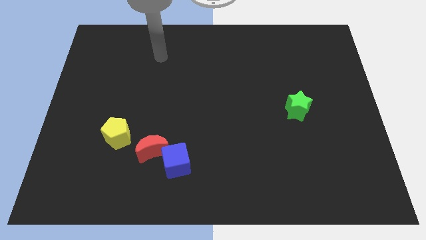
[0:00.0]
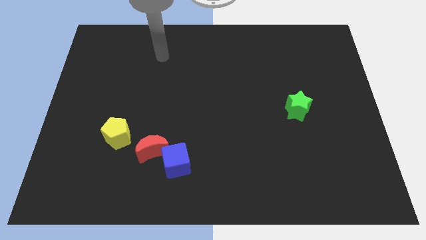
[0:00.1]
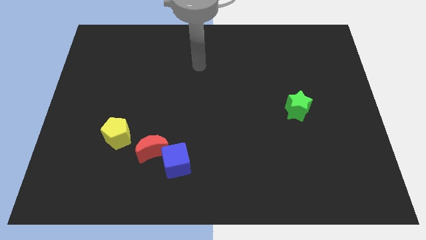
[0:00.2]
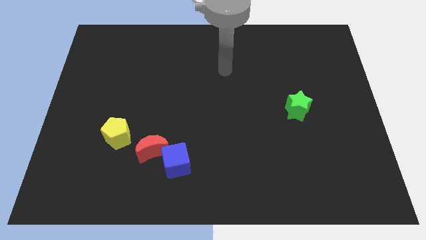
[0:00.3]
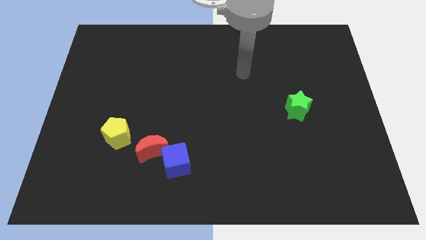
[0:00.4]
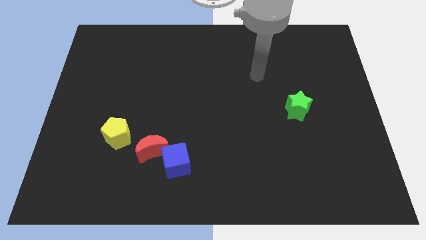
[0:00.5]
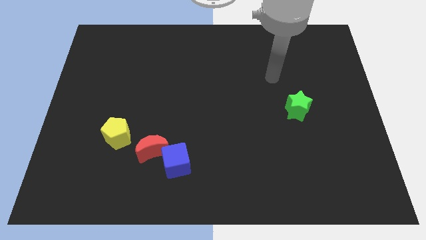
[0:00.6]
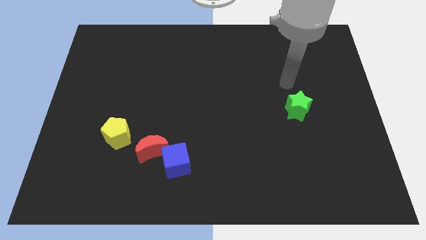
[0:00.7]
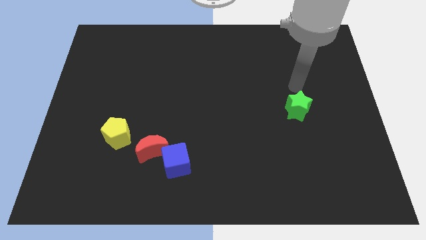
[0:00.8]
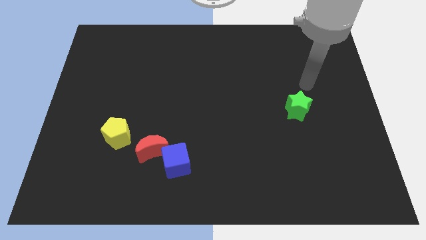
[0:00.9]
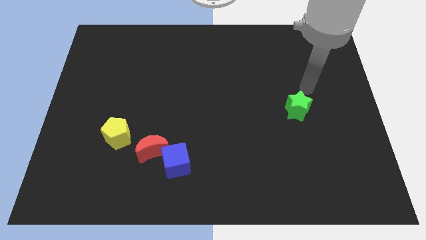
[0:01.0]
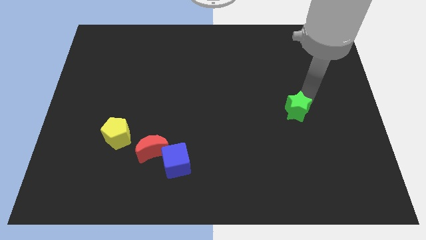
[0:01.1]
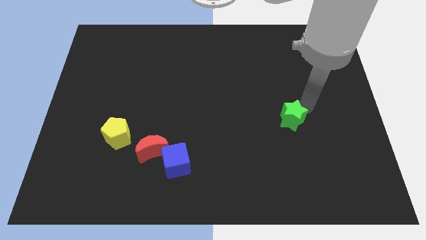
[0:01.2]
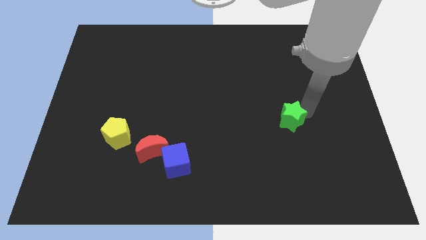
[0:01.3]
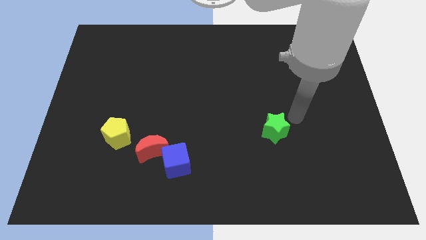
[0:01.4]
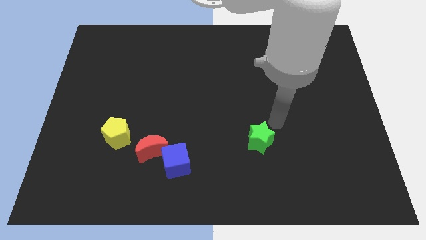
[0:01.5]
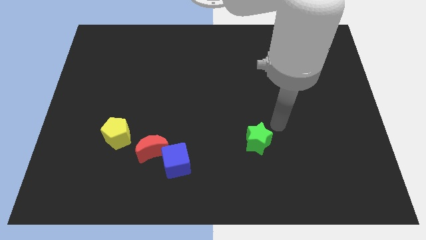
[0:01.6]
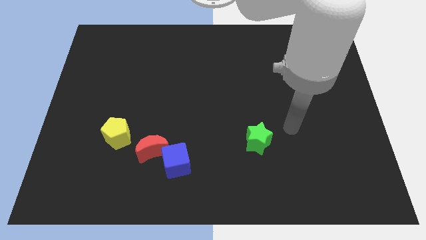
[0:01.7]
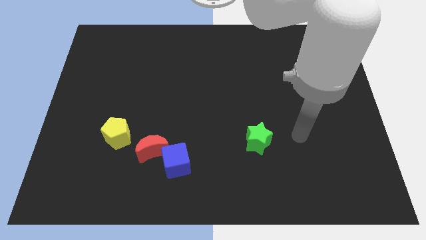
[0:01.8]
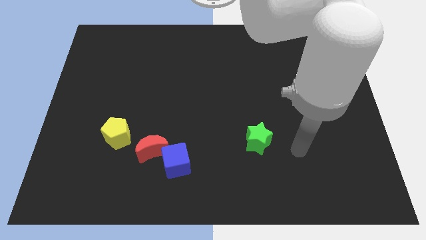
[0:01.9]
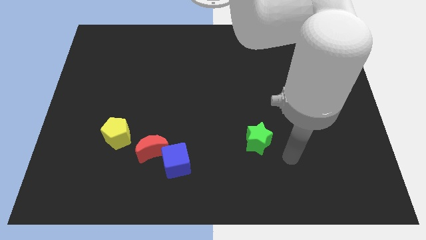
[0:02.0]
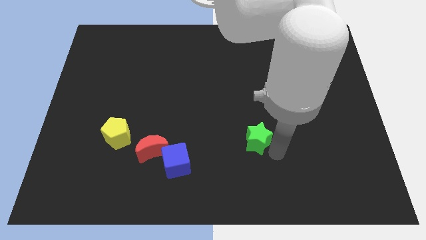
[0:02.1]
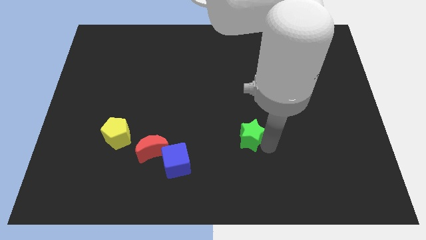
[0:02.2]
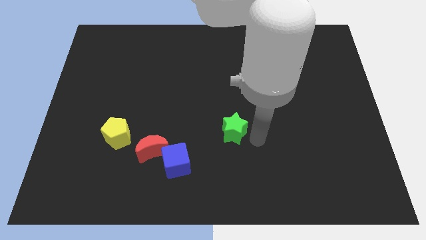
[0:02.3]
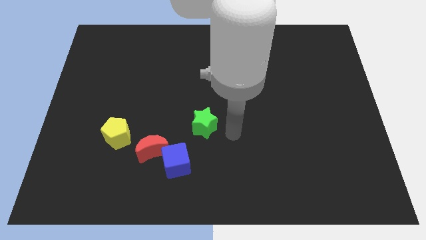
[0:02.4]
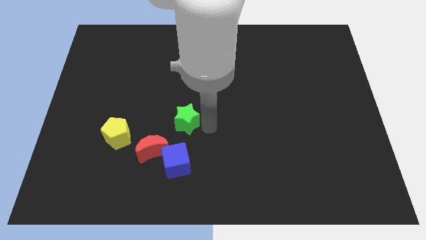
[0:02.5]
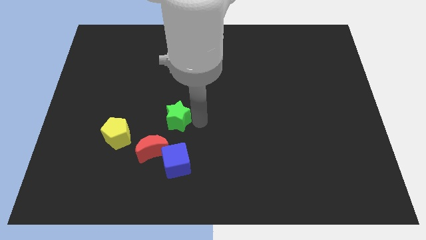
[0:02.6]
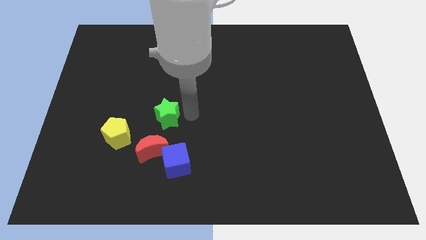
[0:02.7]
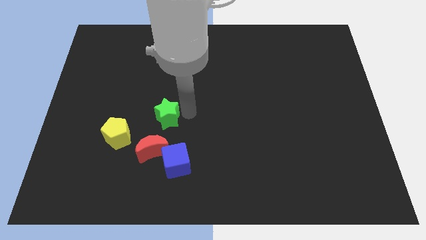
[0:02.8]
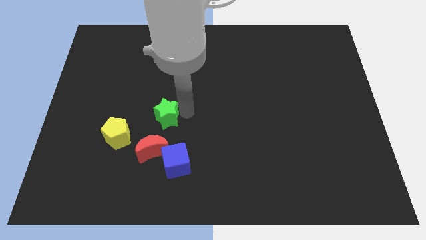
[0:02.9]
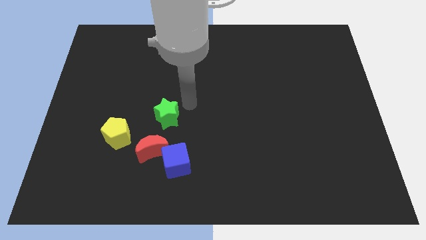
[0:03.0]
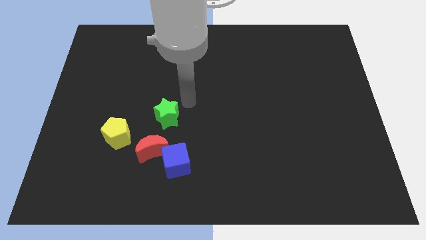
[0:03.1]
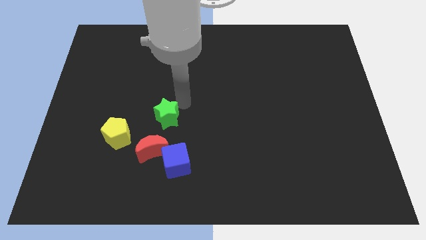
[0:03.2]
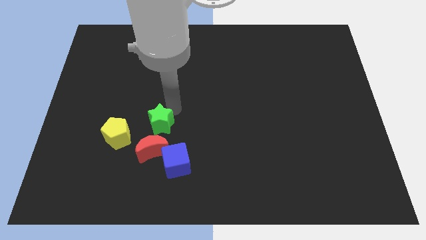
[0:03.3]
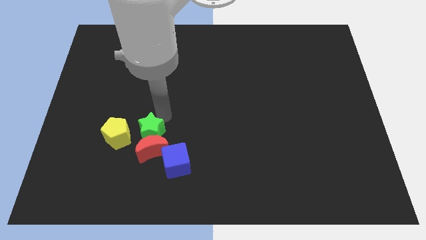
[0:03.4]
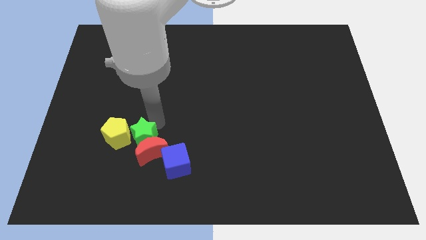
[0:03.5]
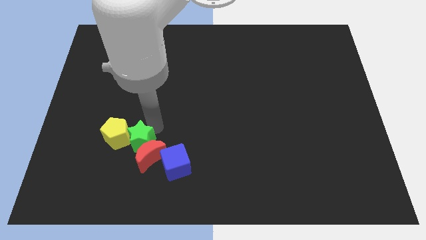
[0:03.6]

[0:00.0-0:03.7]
put the star to the red moon

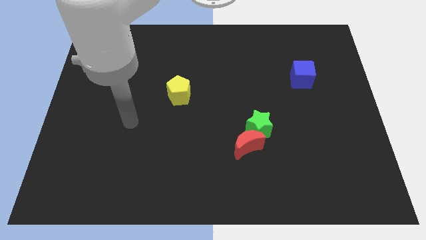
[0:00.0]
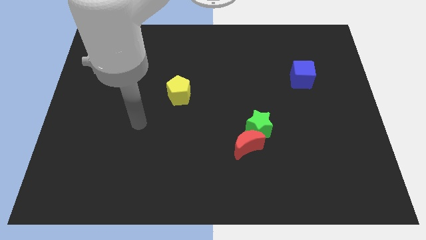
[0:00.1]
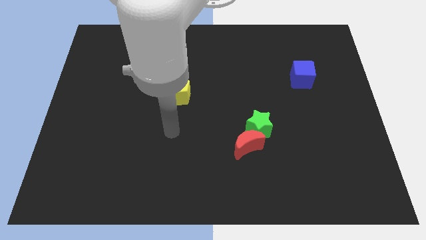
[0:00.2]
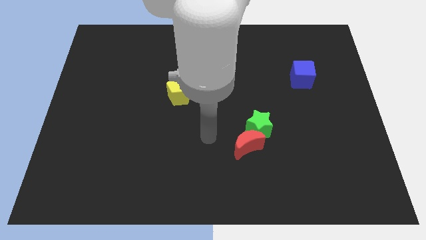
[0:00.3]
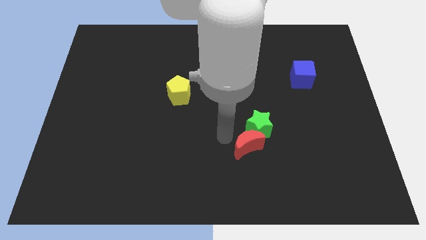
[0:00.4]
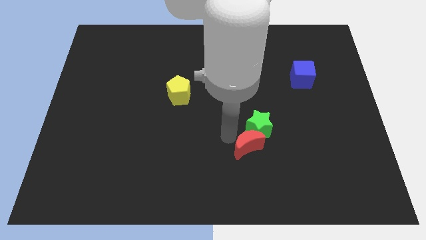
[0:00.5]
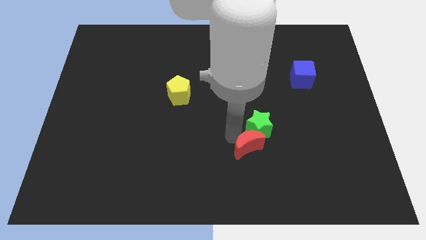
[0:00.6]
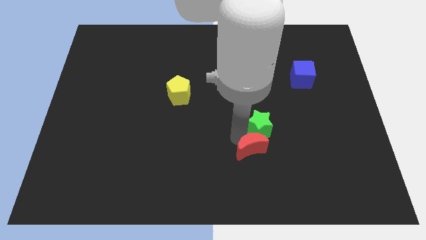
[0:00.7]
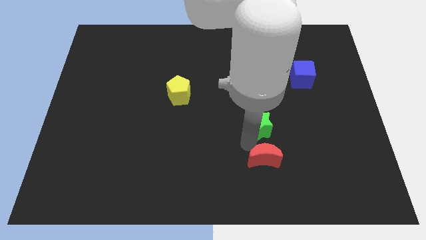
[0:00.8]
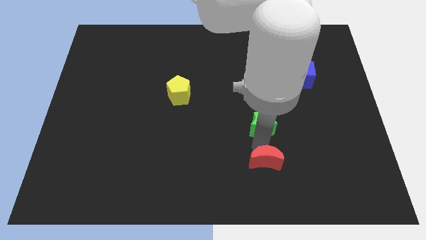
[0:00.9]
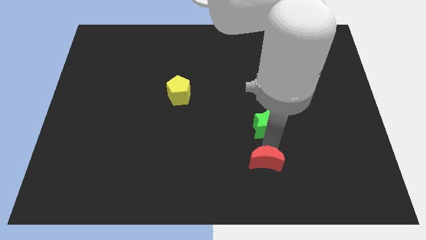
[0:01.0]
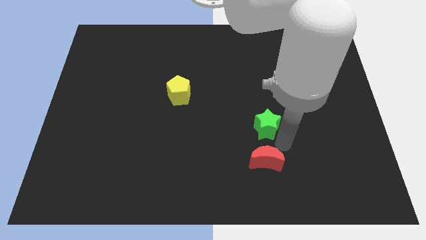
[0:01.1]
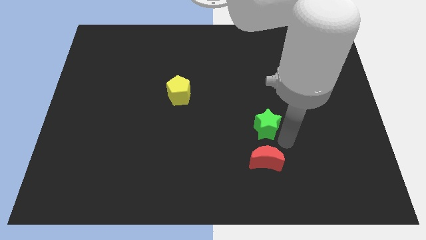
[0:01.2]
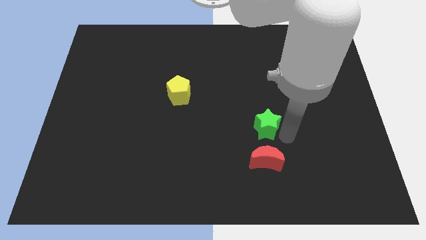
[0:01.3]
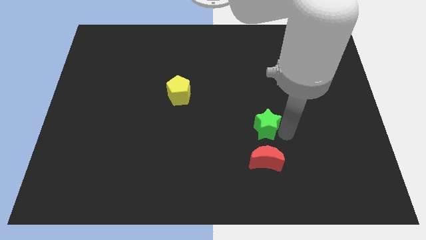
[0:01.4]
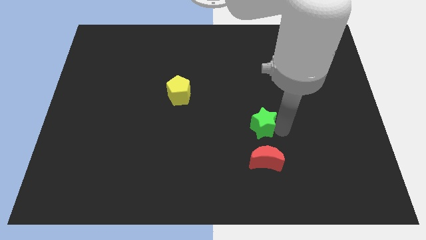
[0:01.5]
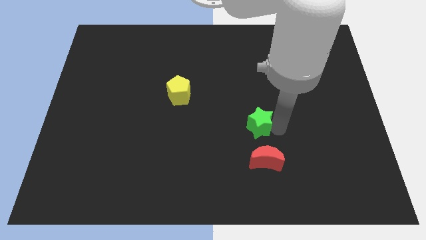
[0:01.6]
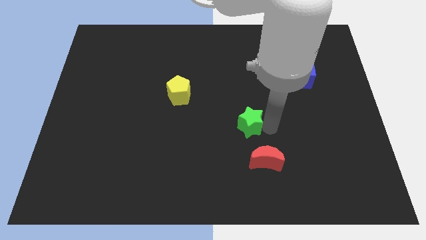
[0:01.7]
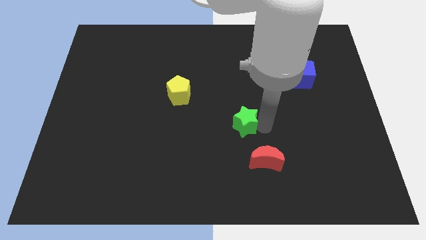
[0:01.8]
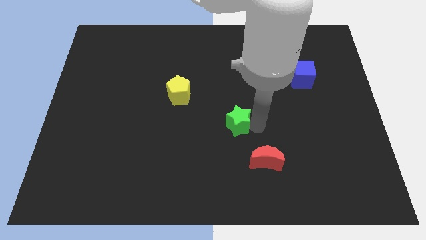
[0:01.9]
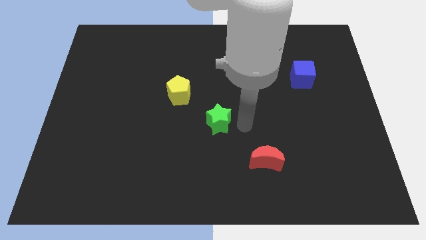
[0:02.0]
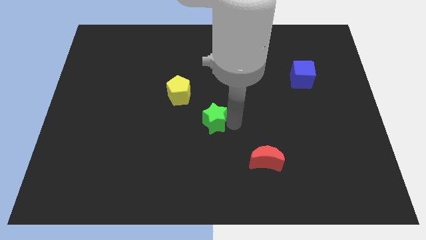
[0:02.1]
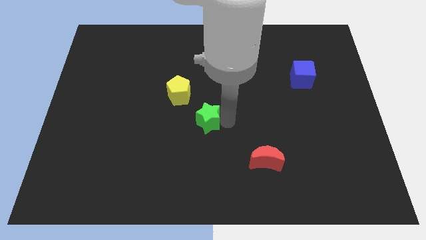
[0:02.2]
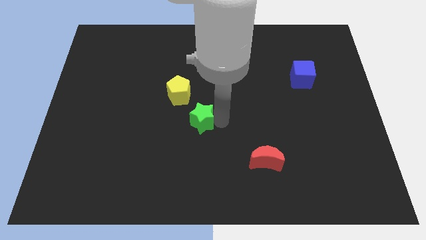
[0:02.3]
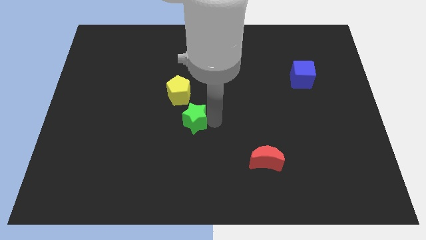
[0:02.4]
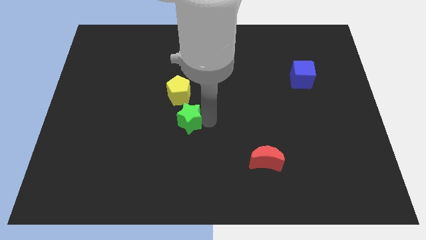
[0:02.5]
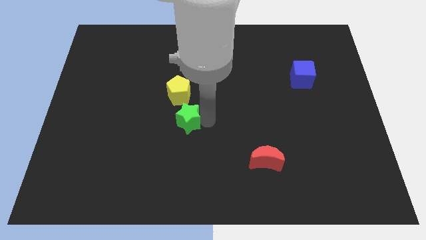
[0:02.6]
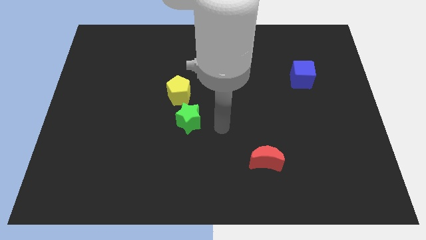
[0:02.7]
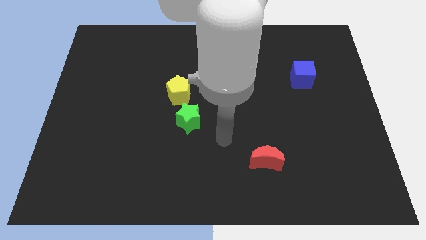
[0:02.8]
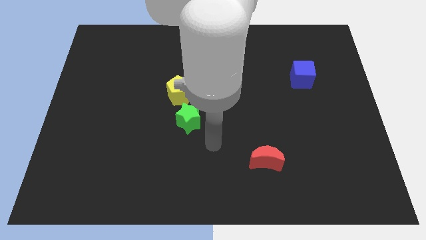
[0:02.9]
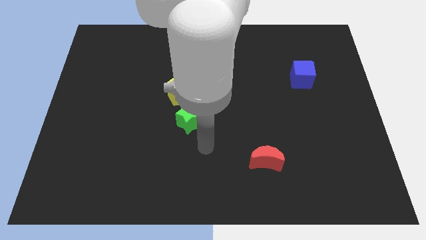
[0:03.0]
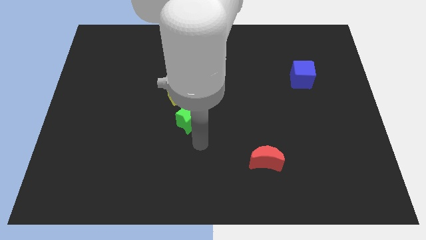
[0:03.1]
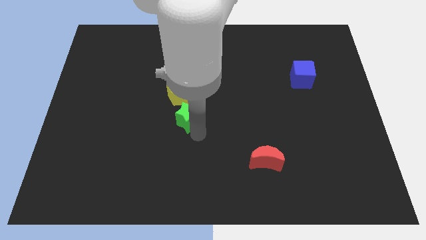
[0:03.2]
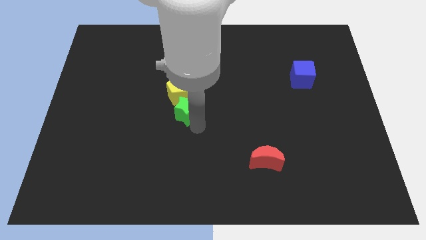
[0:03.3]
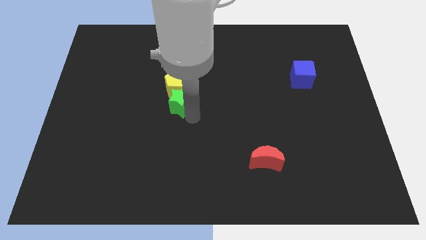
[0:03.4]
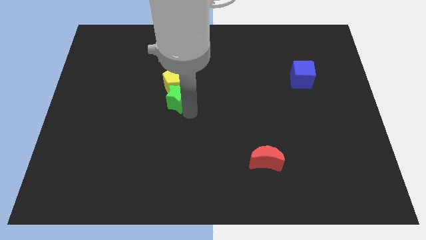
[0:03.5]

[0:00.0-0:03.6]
move the green star close to the yellow block

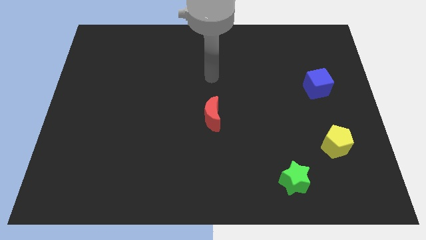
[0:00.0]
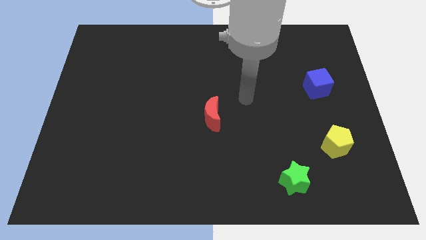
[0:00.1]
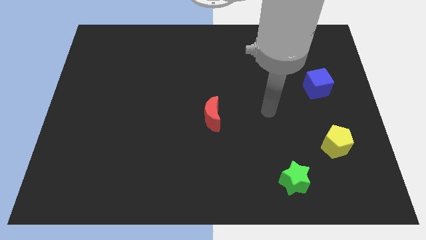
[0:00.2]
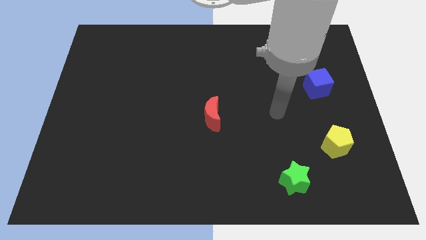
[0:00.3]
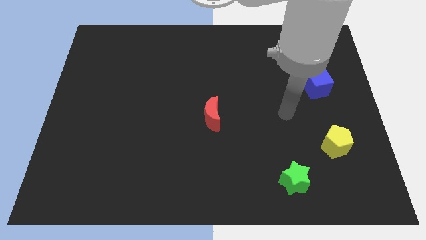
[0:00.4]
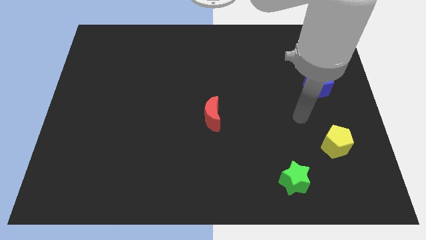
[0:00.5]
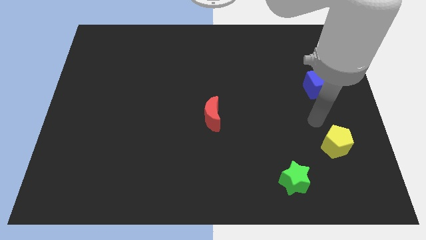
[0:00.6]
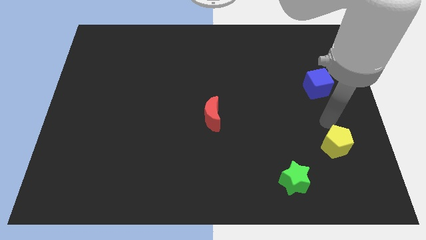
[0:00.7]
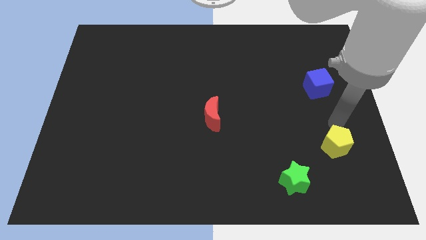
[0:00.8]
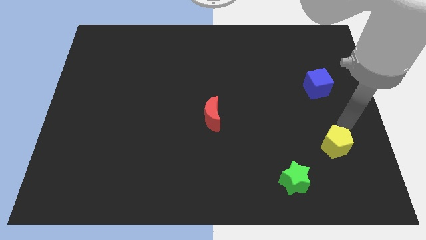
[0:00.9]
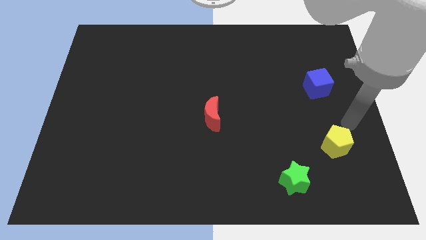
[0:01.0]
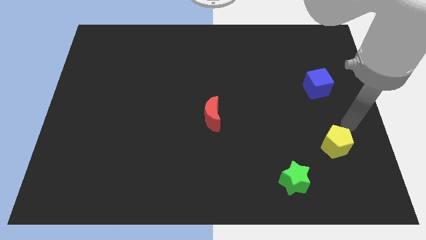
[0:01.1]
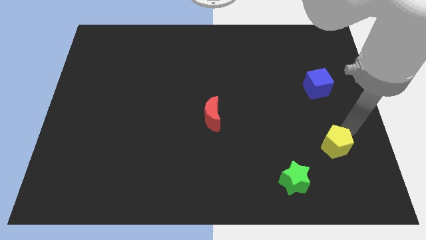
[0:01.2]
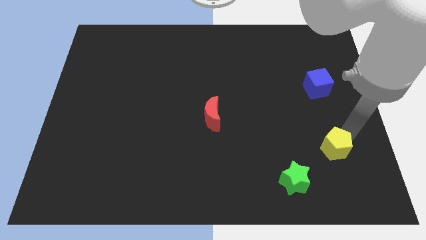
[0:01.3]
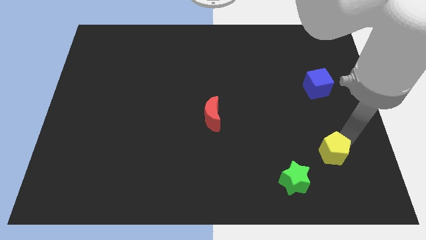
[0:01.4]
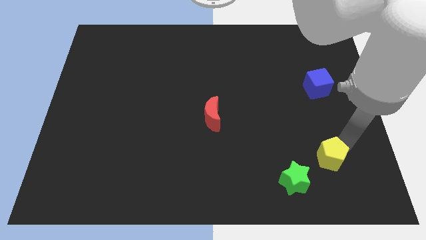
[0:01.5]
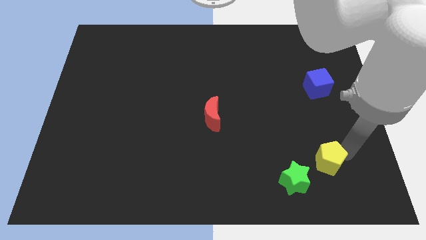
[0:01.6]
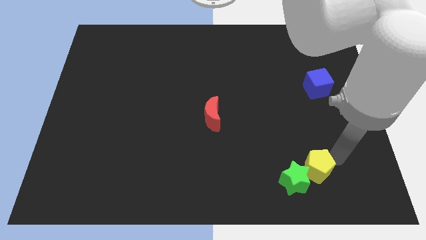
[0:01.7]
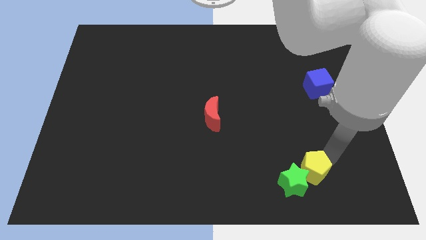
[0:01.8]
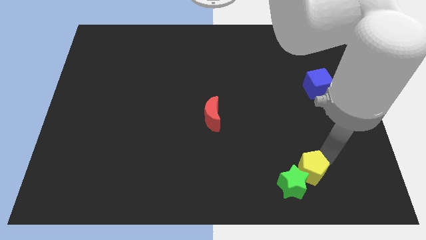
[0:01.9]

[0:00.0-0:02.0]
push the yellow block to the green block
